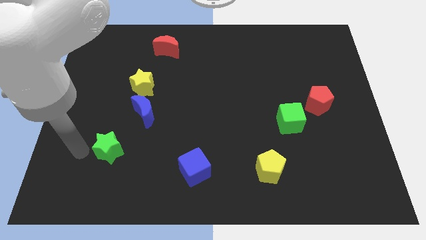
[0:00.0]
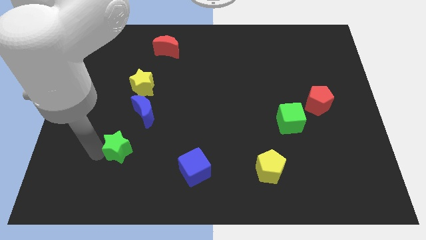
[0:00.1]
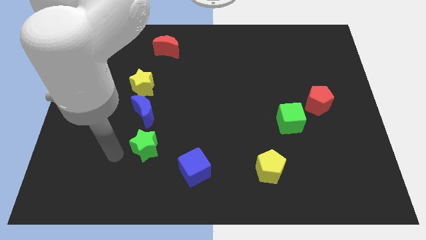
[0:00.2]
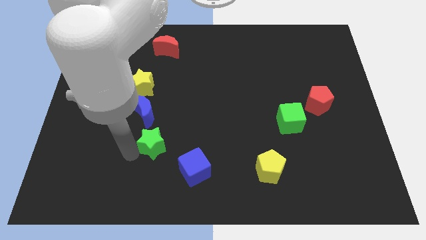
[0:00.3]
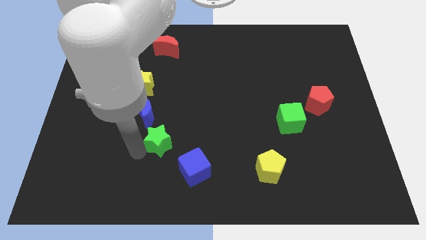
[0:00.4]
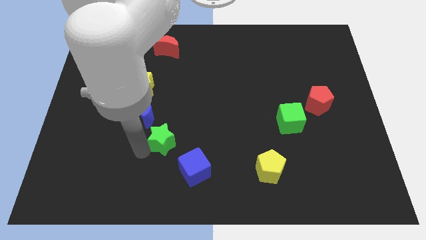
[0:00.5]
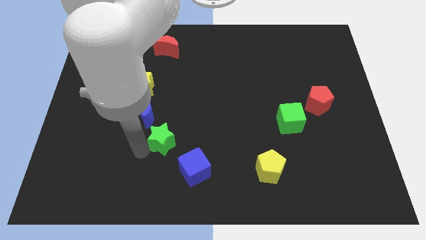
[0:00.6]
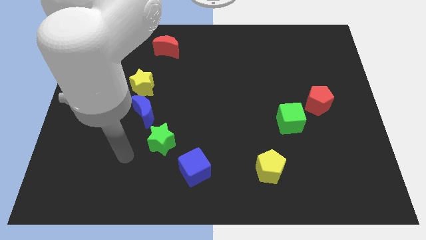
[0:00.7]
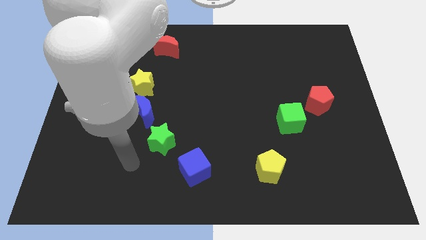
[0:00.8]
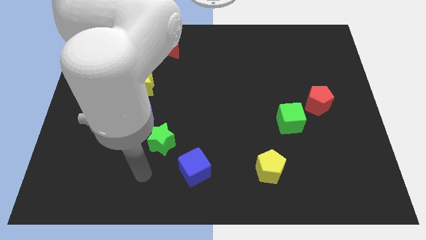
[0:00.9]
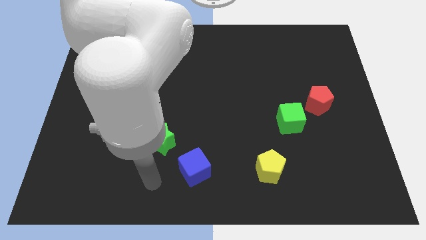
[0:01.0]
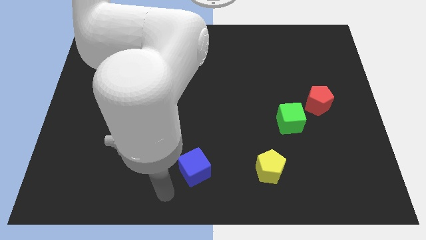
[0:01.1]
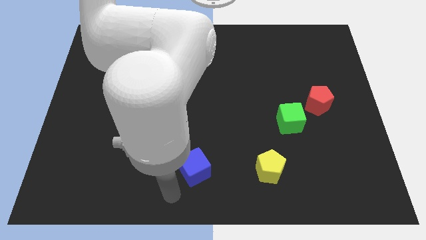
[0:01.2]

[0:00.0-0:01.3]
push the green star towards the blue crescent

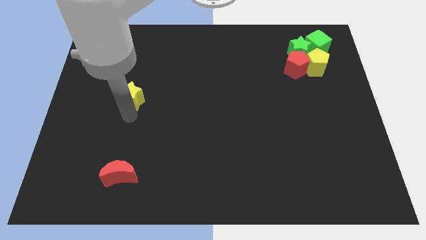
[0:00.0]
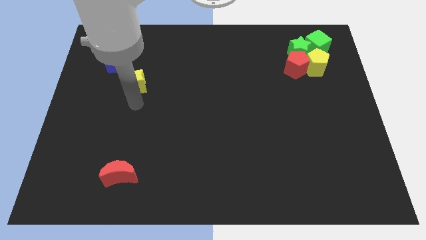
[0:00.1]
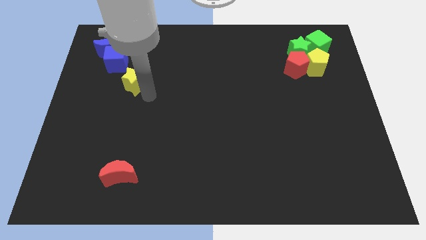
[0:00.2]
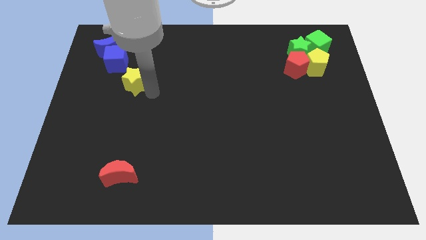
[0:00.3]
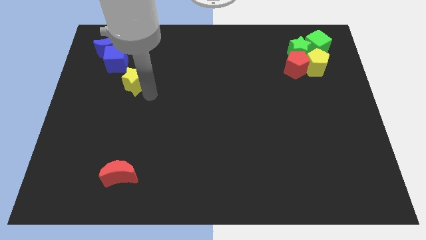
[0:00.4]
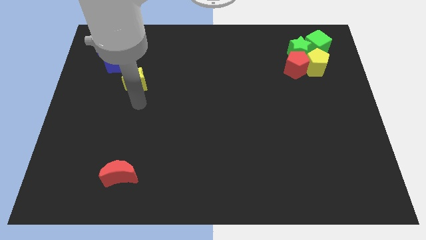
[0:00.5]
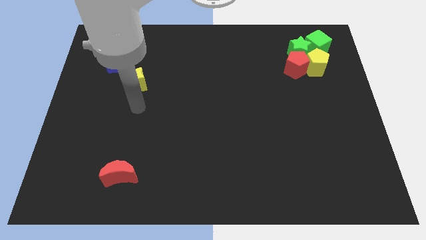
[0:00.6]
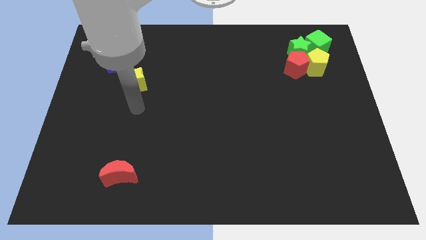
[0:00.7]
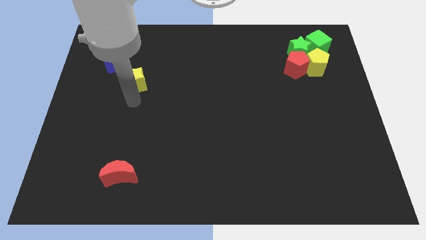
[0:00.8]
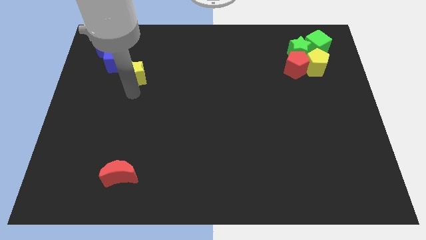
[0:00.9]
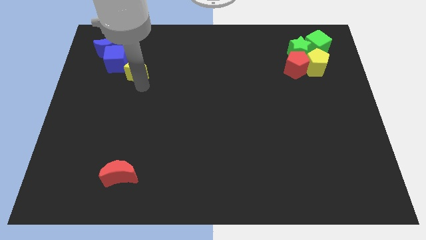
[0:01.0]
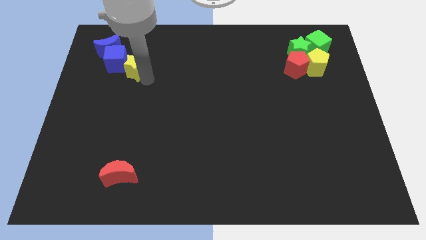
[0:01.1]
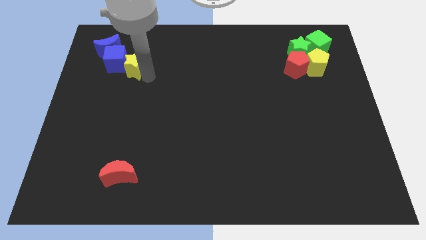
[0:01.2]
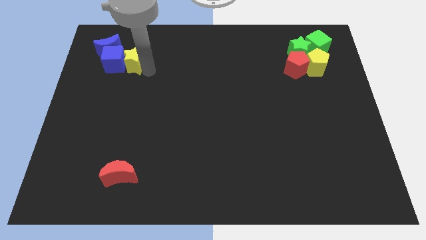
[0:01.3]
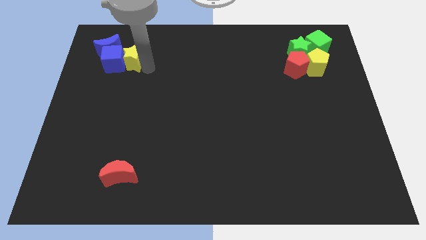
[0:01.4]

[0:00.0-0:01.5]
move the yellow star right to the blue cube

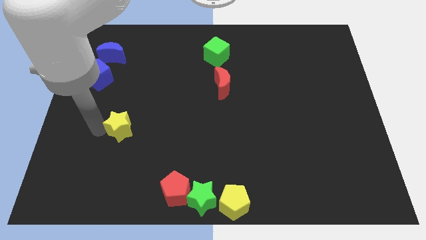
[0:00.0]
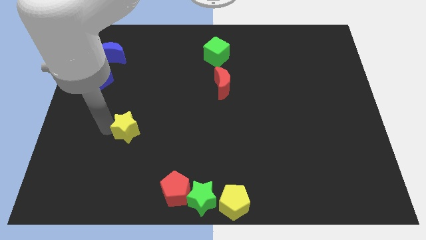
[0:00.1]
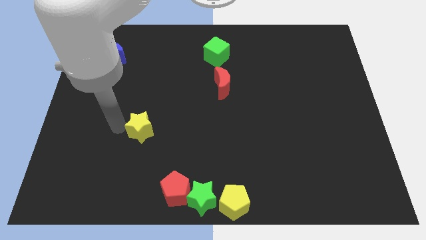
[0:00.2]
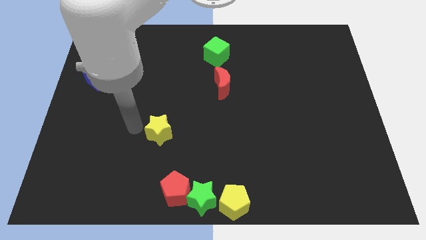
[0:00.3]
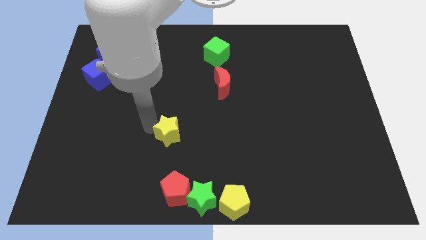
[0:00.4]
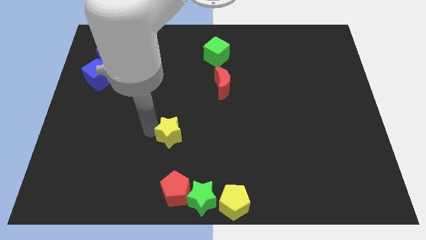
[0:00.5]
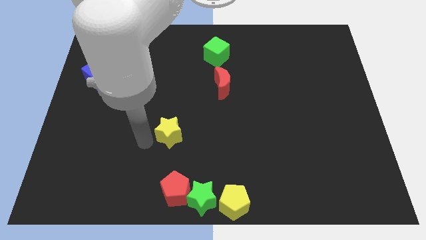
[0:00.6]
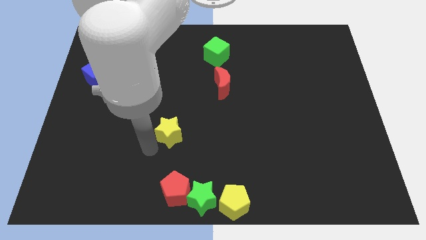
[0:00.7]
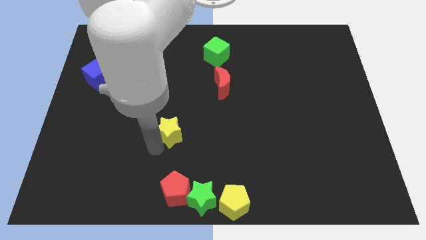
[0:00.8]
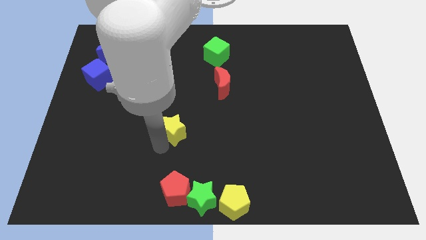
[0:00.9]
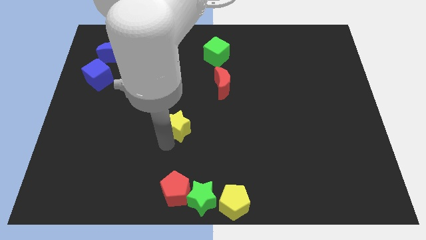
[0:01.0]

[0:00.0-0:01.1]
place yellow star vertical to red pentagon

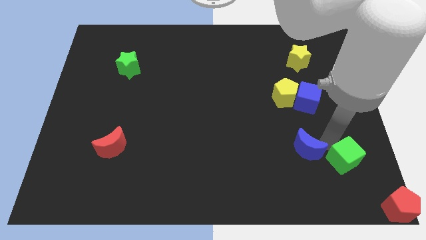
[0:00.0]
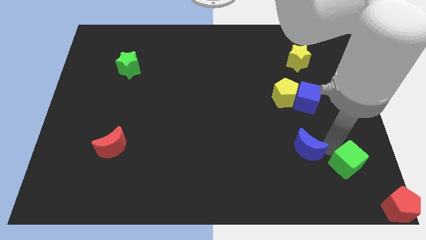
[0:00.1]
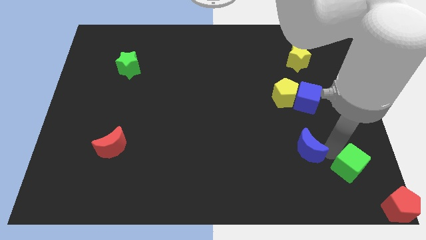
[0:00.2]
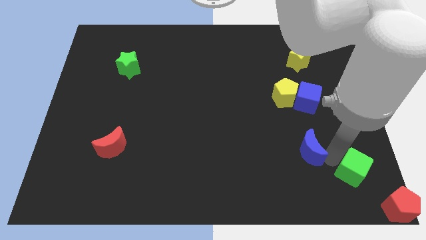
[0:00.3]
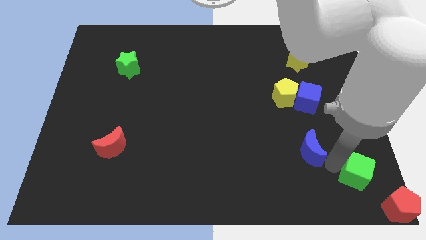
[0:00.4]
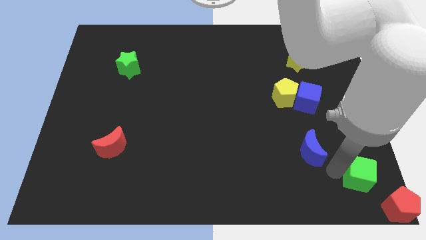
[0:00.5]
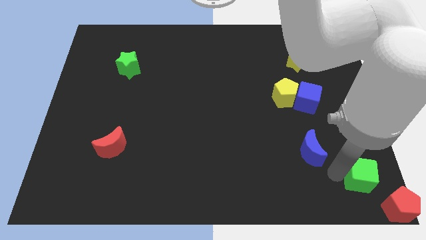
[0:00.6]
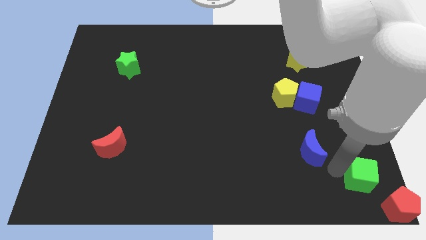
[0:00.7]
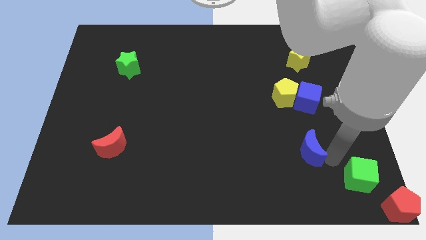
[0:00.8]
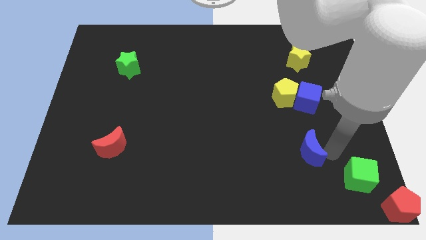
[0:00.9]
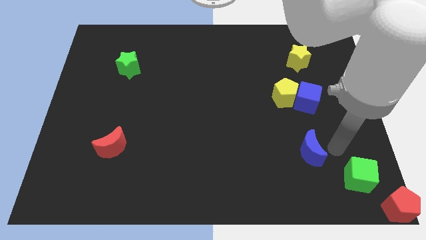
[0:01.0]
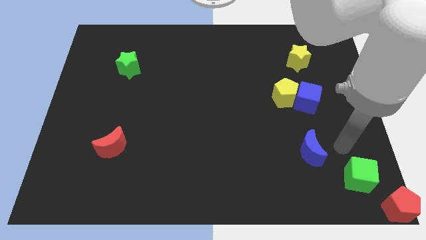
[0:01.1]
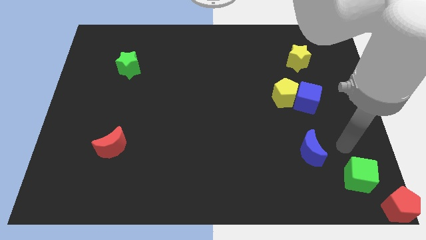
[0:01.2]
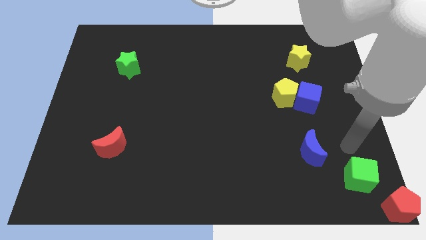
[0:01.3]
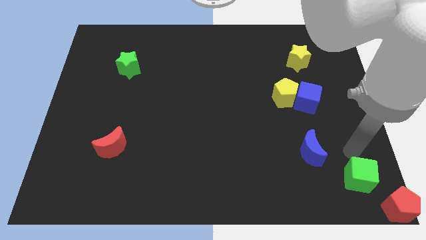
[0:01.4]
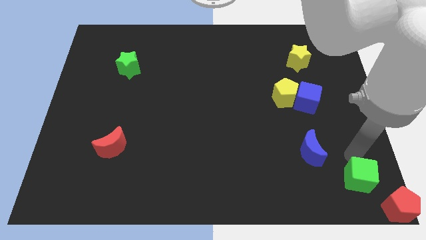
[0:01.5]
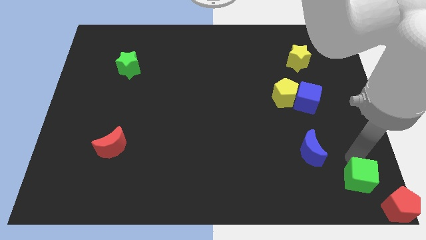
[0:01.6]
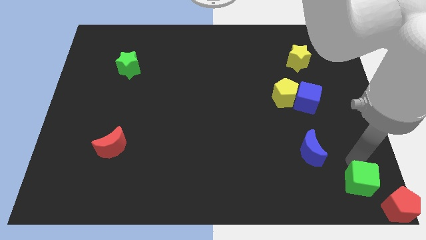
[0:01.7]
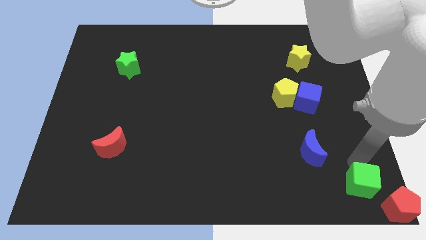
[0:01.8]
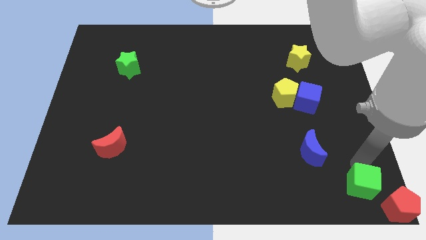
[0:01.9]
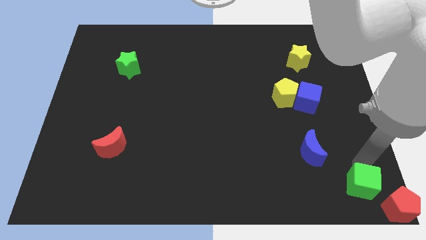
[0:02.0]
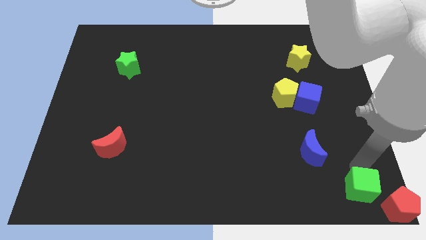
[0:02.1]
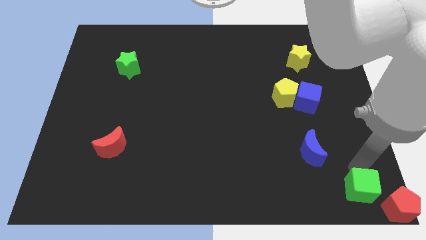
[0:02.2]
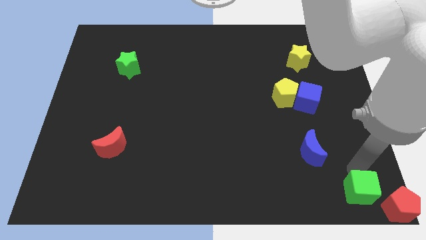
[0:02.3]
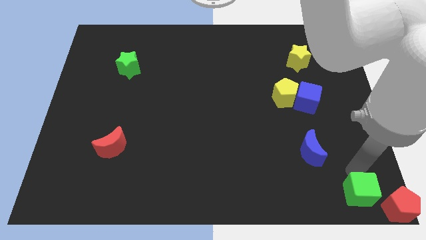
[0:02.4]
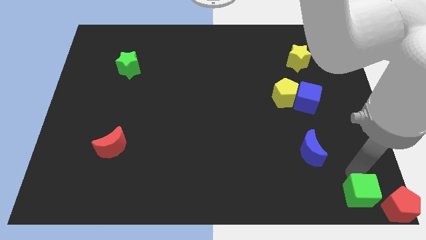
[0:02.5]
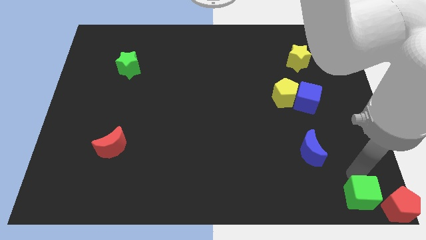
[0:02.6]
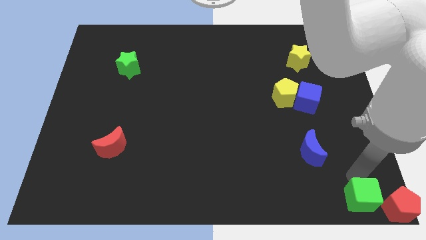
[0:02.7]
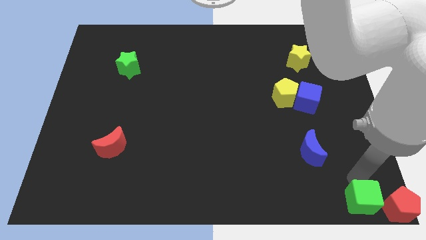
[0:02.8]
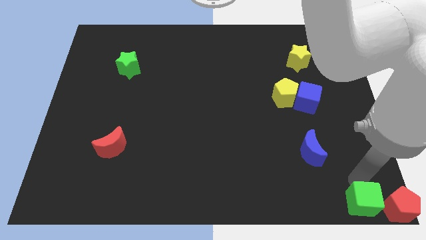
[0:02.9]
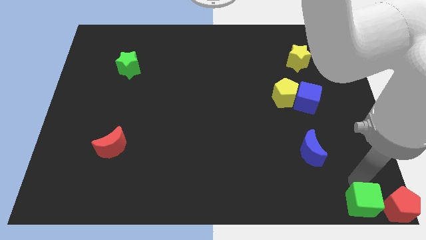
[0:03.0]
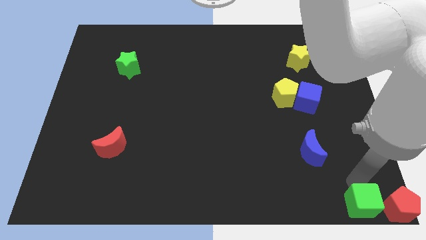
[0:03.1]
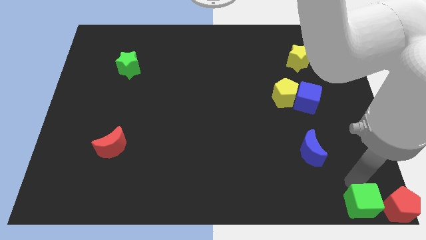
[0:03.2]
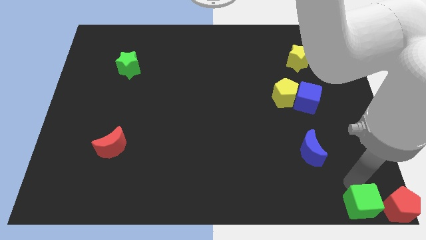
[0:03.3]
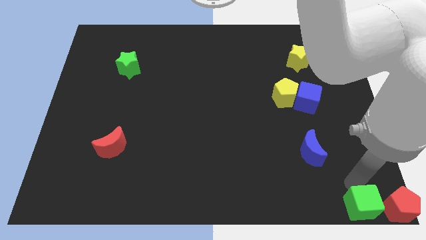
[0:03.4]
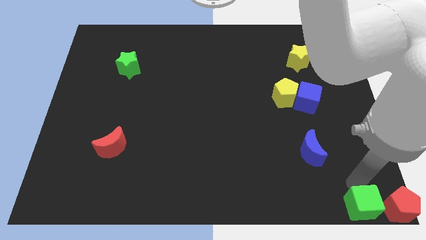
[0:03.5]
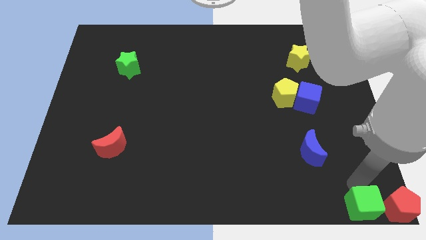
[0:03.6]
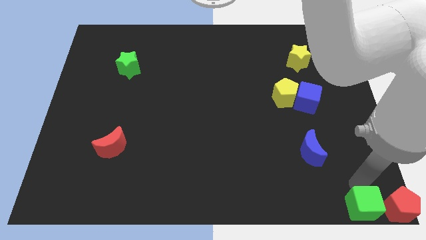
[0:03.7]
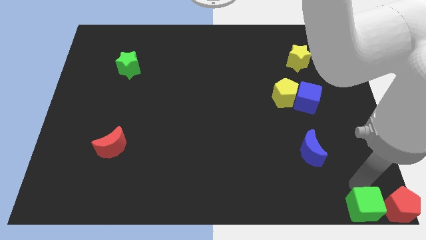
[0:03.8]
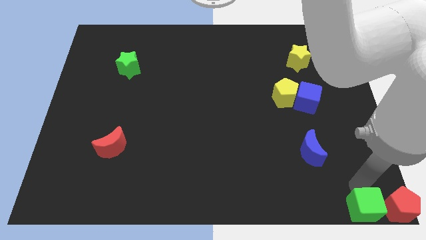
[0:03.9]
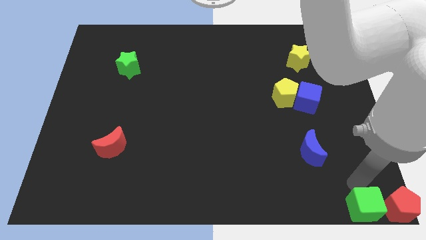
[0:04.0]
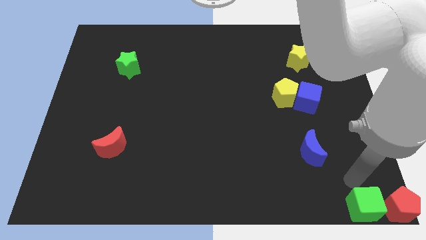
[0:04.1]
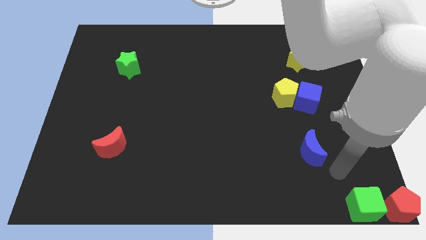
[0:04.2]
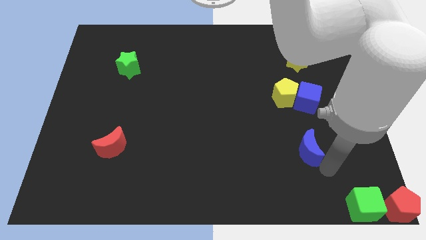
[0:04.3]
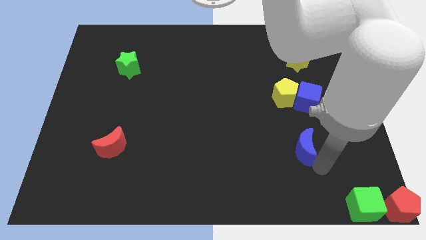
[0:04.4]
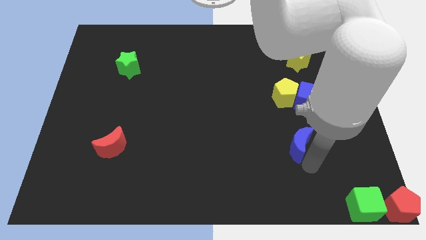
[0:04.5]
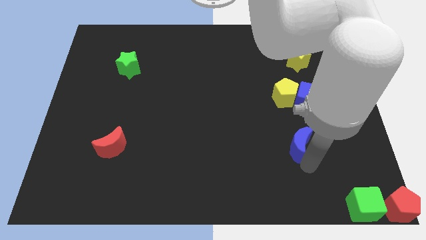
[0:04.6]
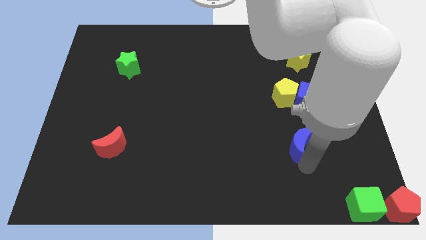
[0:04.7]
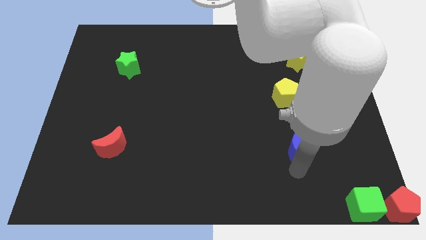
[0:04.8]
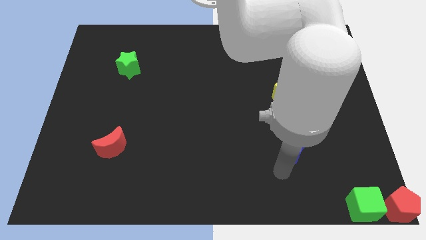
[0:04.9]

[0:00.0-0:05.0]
separate green cube from blue moon

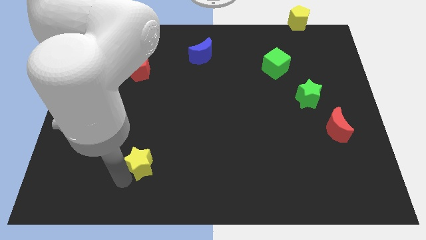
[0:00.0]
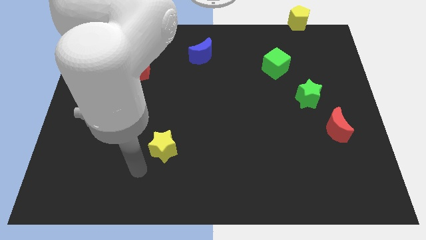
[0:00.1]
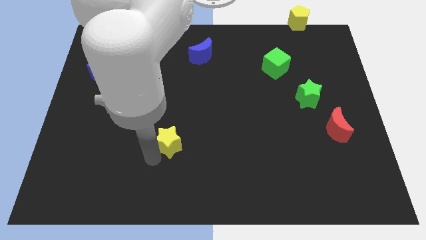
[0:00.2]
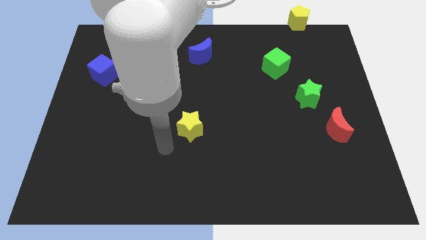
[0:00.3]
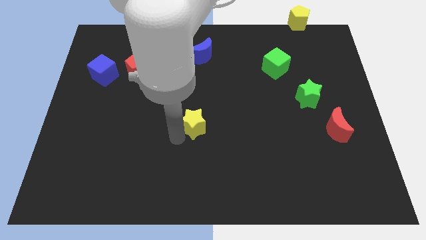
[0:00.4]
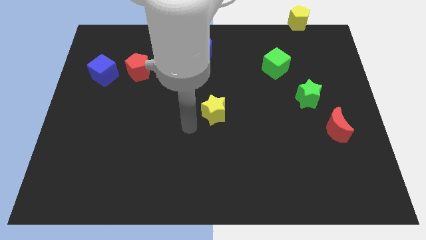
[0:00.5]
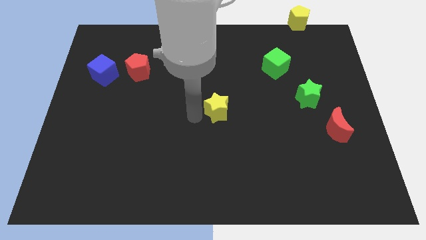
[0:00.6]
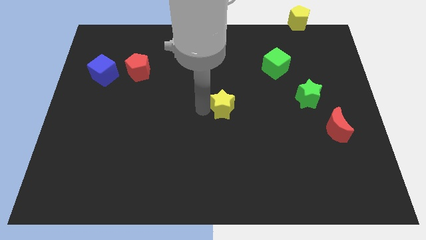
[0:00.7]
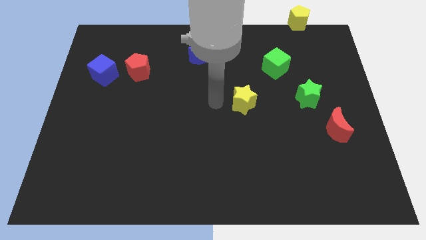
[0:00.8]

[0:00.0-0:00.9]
move the yellow star diagonally to the green cube
